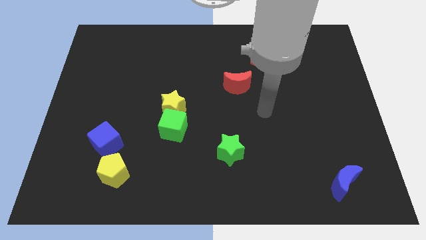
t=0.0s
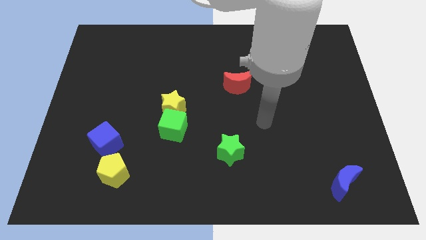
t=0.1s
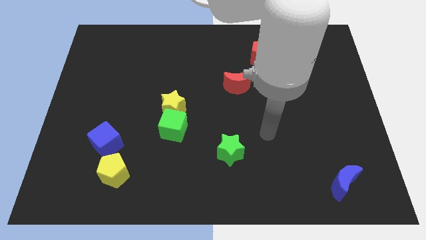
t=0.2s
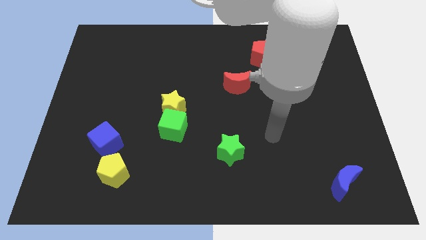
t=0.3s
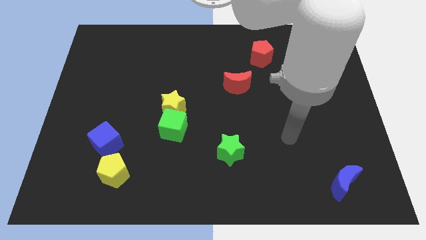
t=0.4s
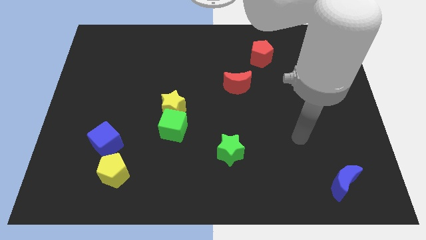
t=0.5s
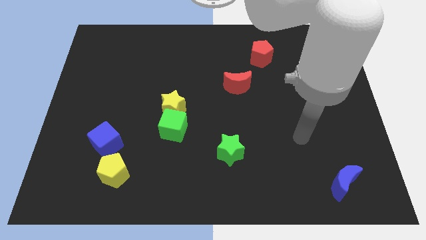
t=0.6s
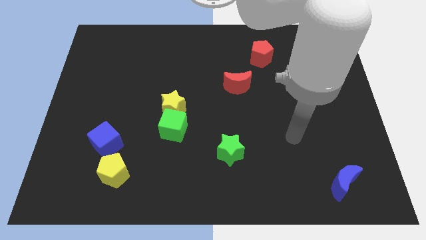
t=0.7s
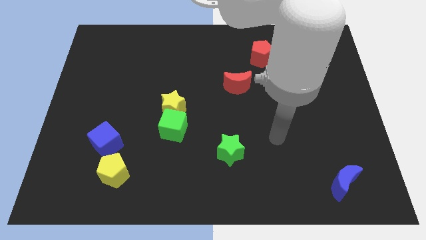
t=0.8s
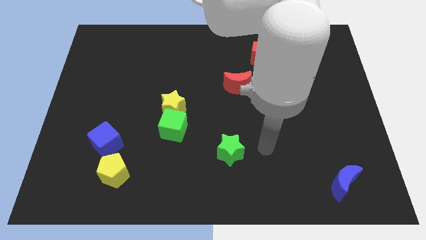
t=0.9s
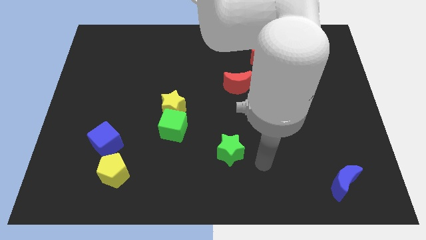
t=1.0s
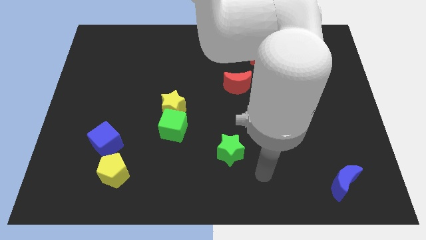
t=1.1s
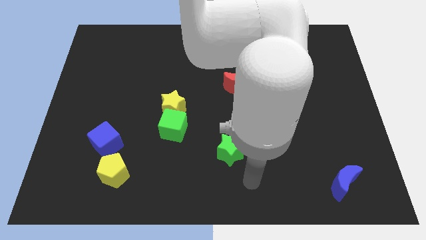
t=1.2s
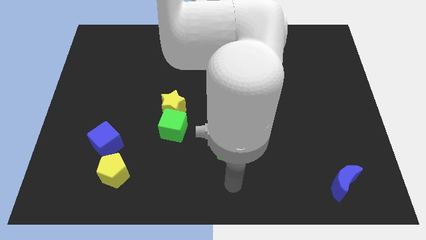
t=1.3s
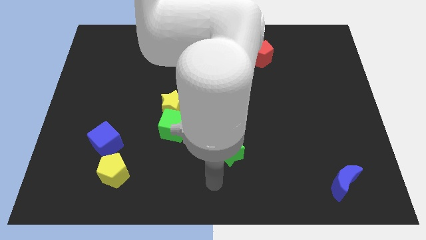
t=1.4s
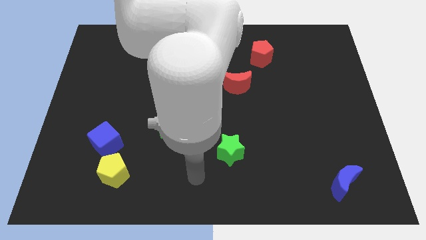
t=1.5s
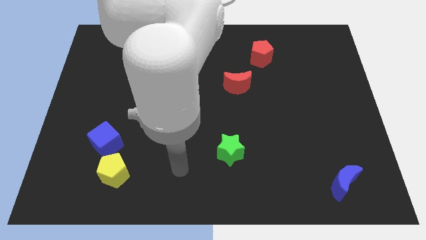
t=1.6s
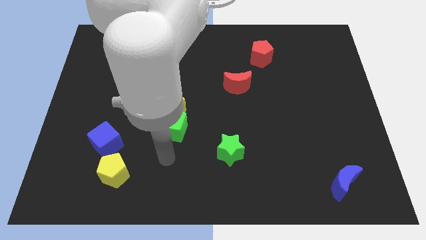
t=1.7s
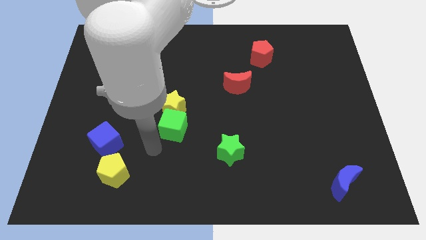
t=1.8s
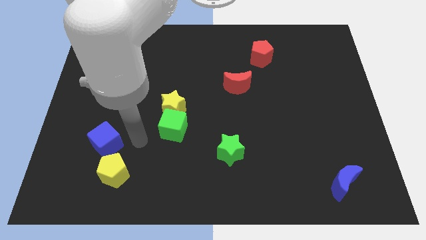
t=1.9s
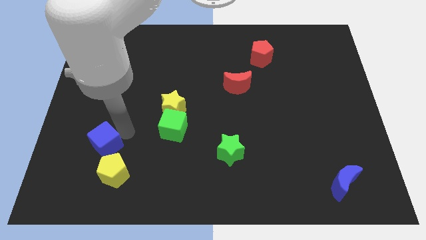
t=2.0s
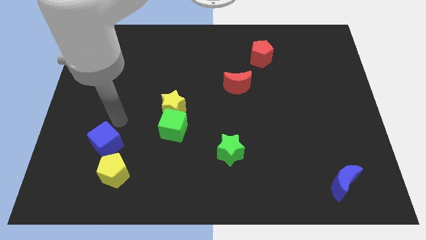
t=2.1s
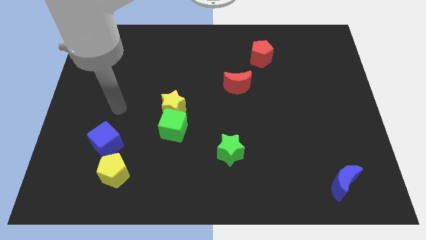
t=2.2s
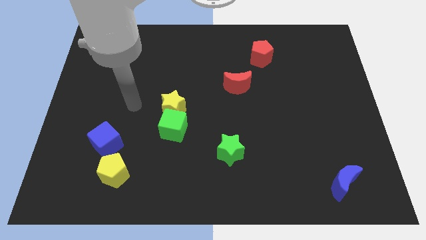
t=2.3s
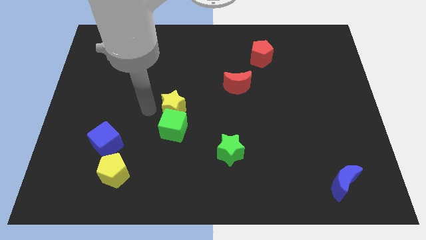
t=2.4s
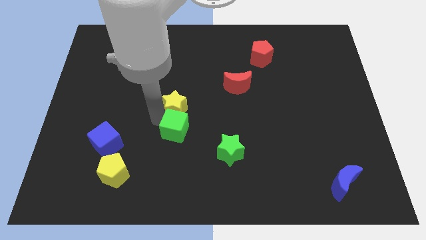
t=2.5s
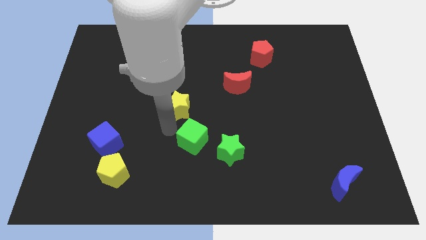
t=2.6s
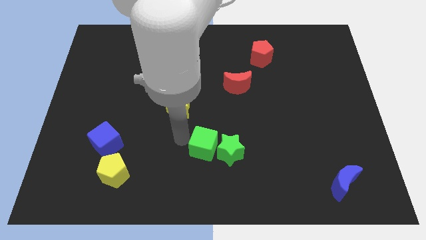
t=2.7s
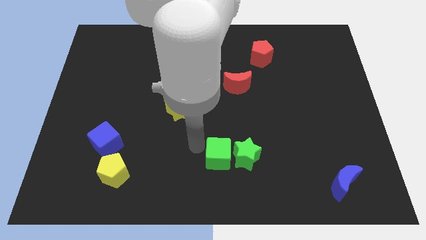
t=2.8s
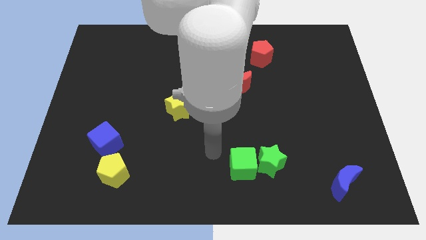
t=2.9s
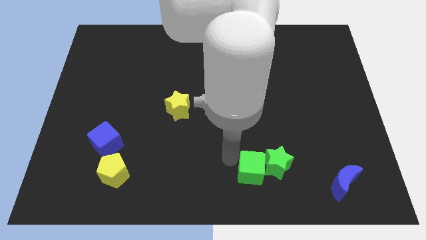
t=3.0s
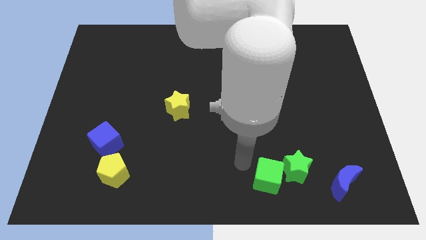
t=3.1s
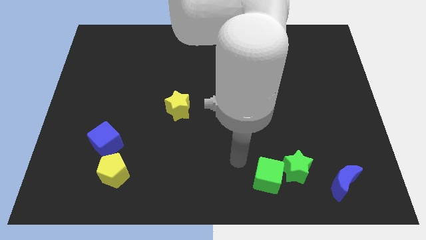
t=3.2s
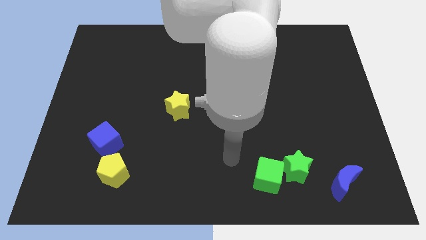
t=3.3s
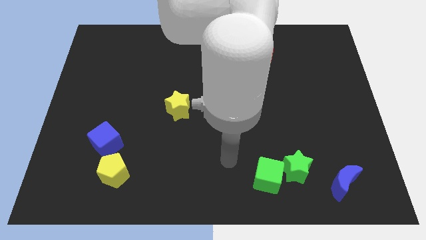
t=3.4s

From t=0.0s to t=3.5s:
push the green blocks to the left of the blue crescent

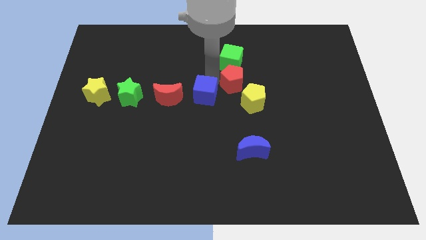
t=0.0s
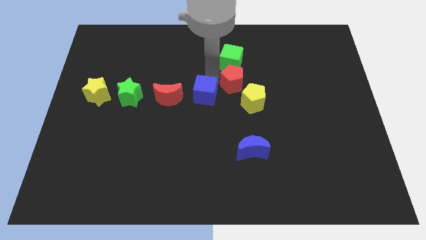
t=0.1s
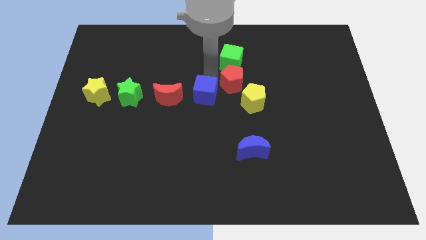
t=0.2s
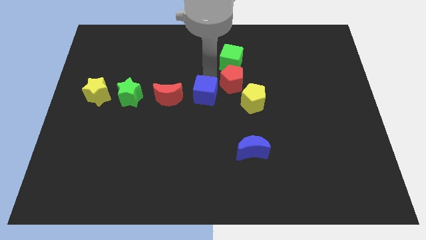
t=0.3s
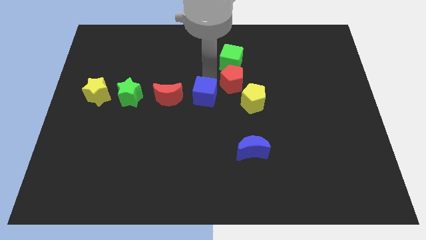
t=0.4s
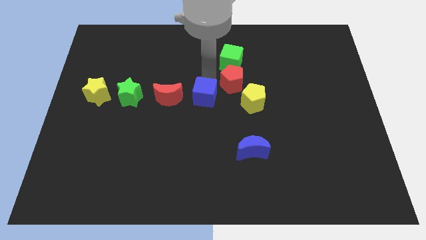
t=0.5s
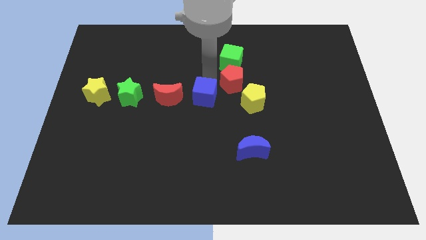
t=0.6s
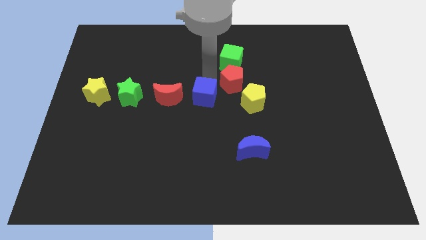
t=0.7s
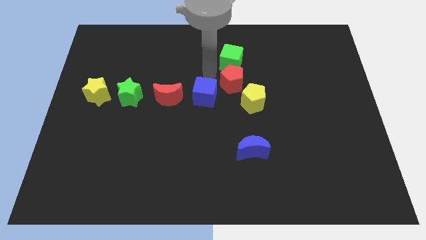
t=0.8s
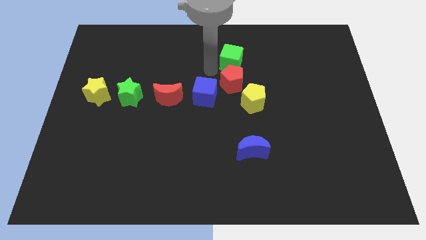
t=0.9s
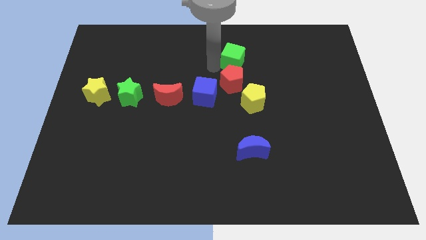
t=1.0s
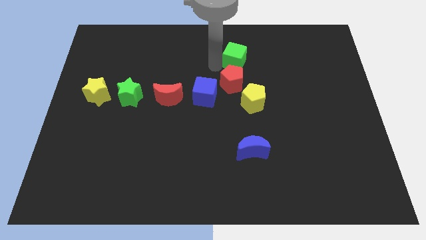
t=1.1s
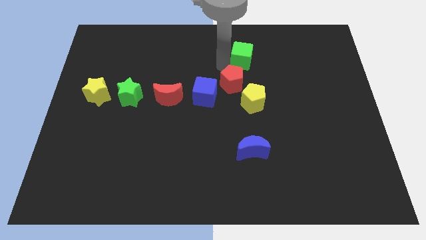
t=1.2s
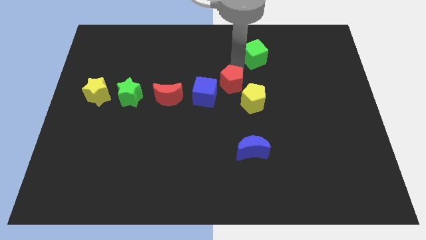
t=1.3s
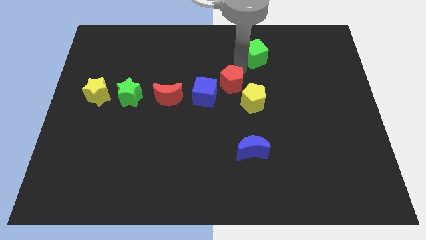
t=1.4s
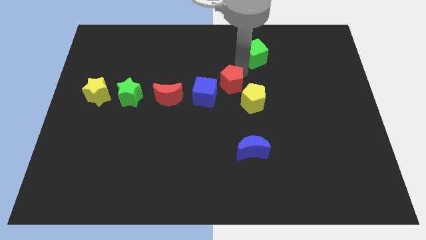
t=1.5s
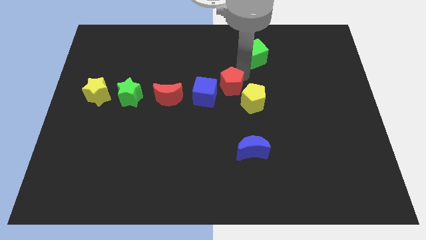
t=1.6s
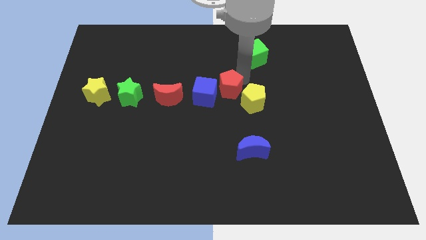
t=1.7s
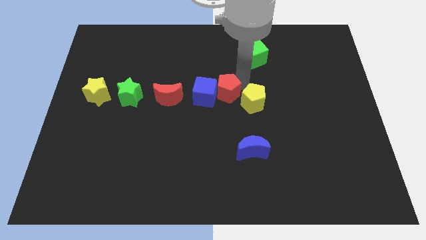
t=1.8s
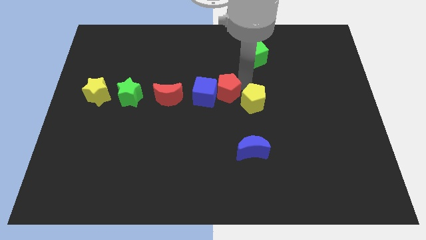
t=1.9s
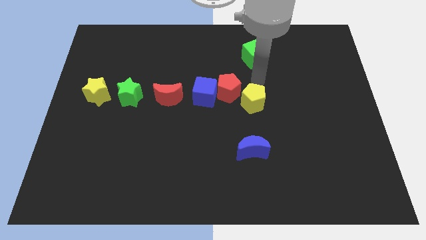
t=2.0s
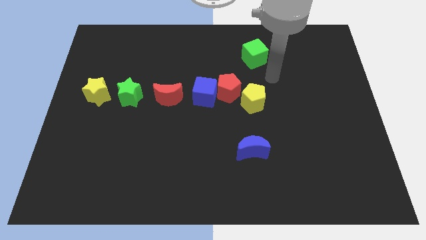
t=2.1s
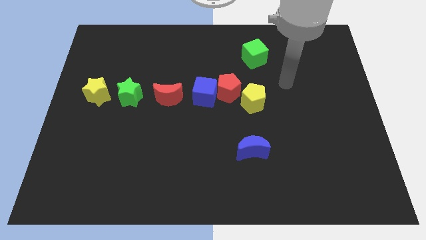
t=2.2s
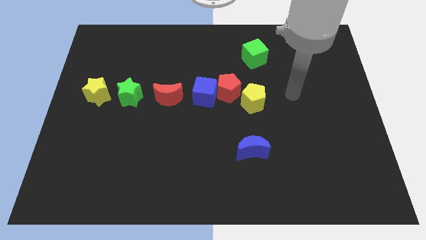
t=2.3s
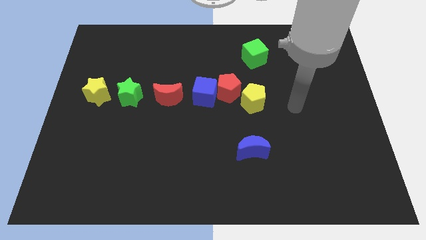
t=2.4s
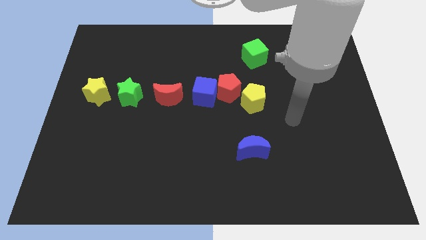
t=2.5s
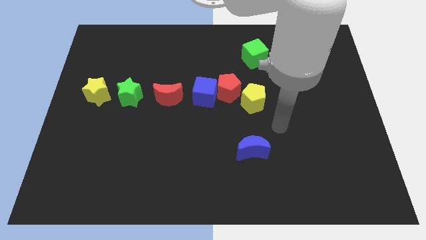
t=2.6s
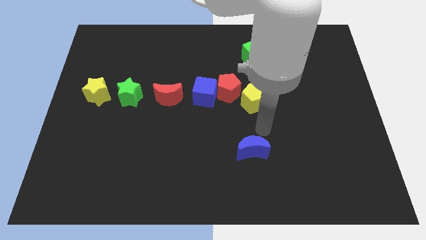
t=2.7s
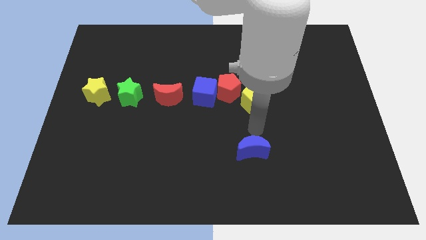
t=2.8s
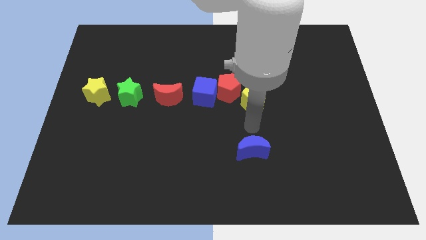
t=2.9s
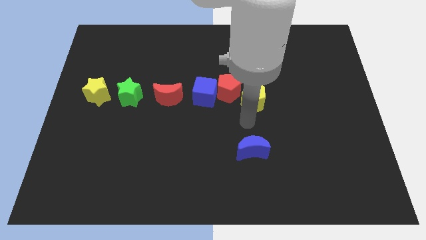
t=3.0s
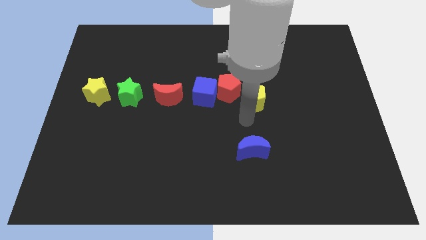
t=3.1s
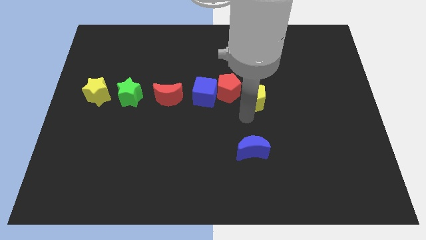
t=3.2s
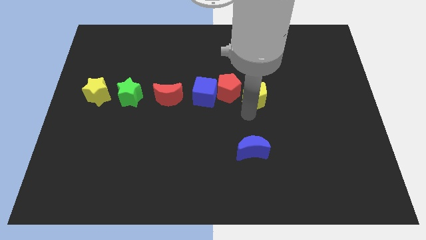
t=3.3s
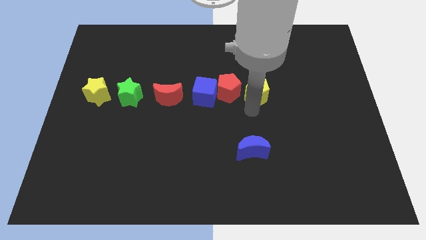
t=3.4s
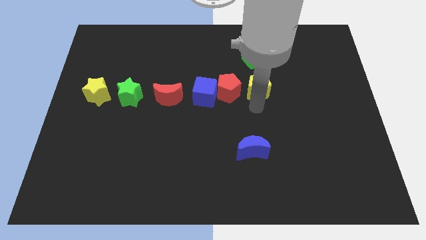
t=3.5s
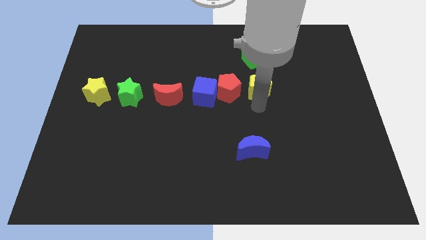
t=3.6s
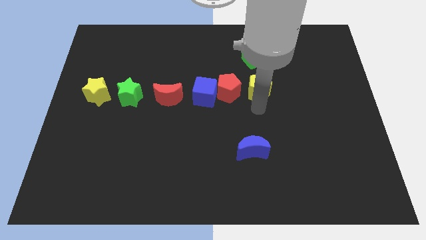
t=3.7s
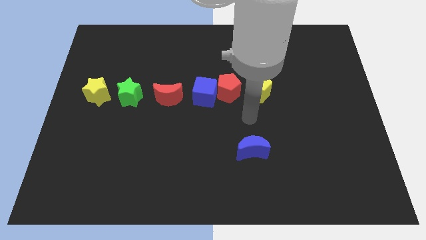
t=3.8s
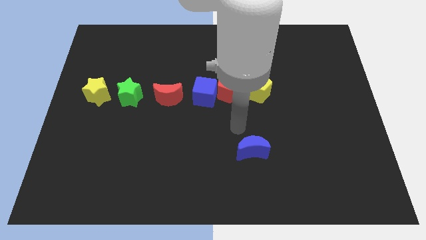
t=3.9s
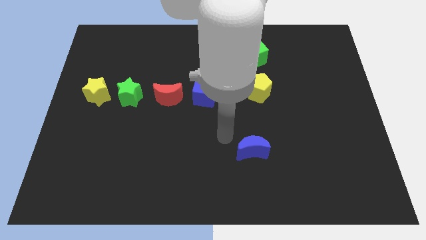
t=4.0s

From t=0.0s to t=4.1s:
adjust blue cube red and yellow pentagon in a horizontal line

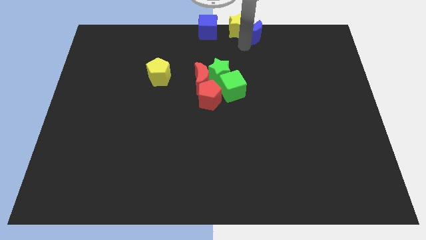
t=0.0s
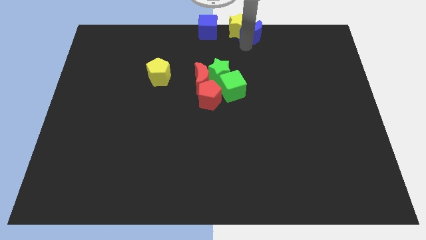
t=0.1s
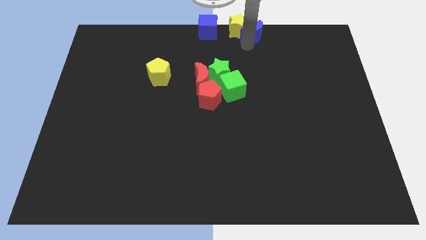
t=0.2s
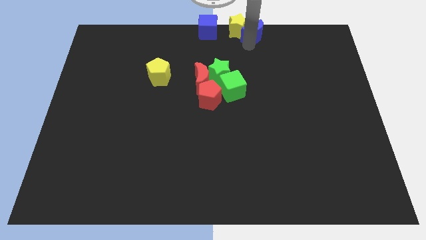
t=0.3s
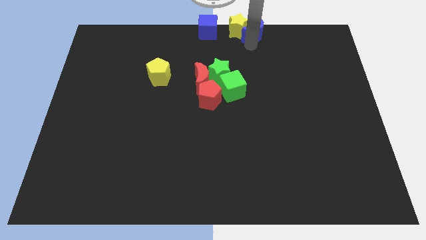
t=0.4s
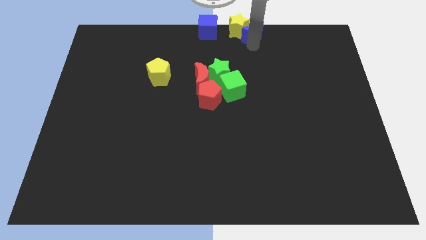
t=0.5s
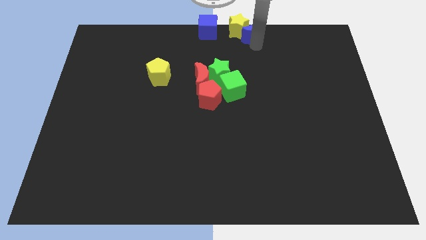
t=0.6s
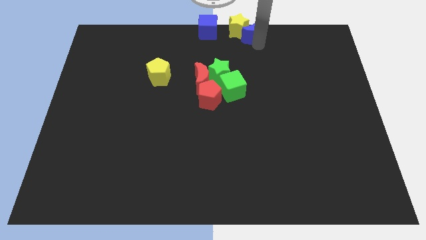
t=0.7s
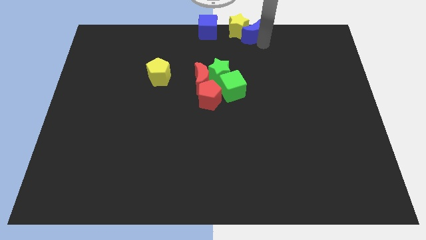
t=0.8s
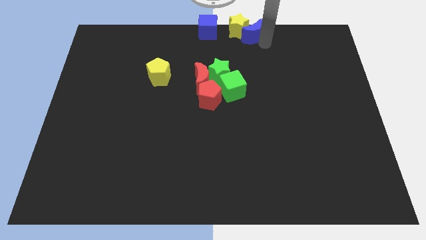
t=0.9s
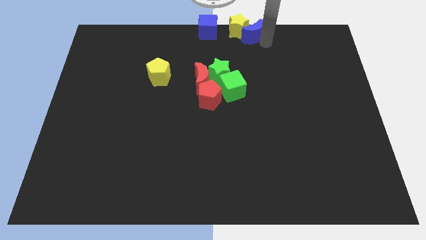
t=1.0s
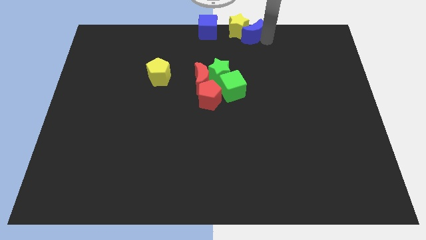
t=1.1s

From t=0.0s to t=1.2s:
push the blue moon into yellow star to the right
